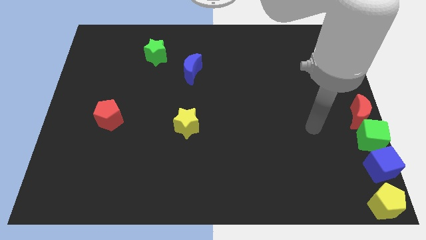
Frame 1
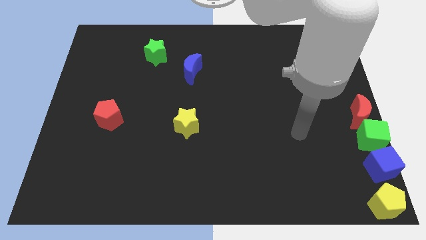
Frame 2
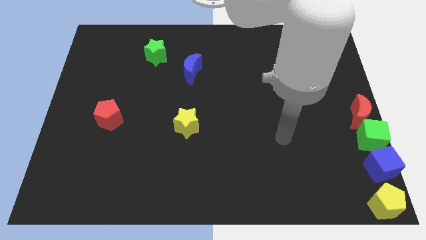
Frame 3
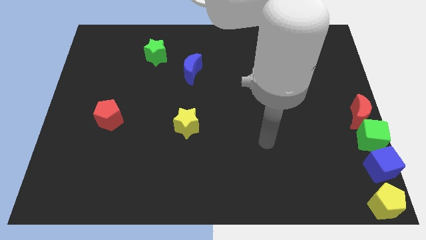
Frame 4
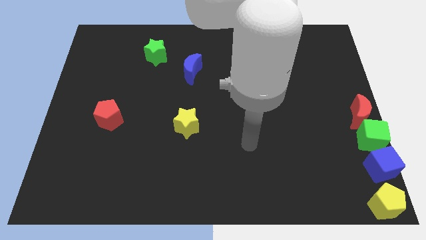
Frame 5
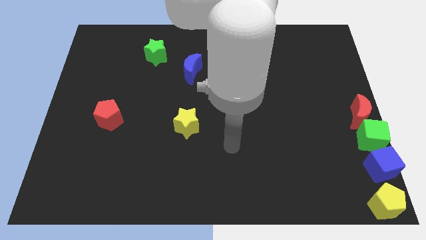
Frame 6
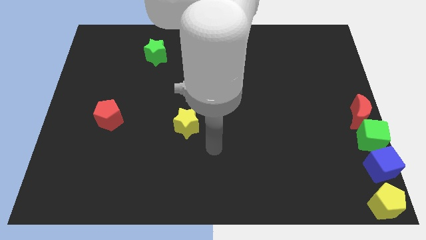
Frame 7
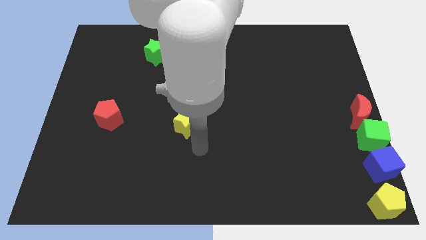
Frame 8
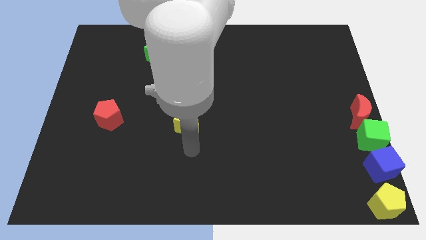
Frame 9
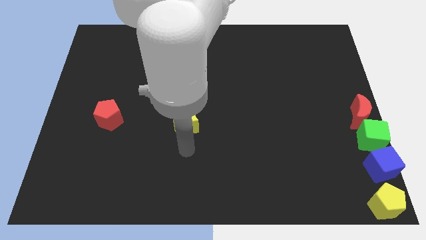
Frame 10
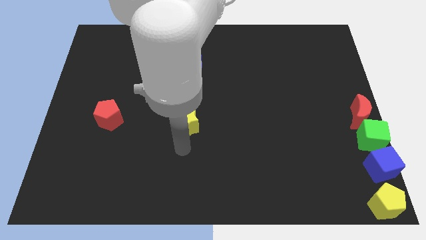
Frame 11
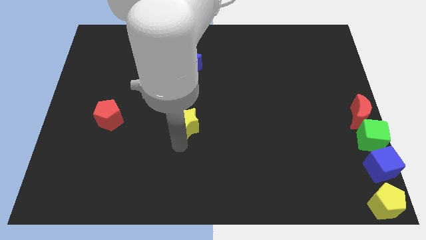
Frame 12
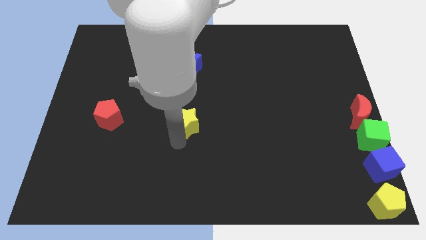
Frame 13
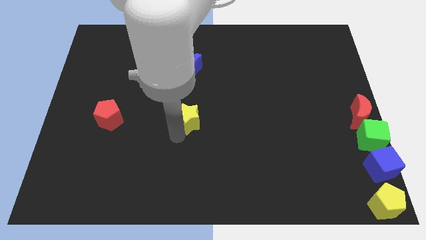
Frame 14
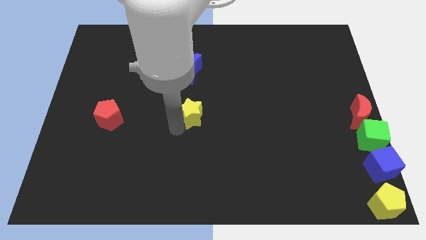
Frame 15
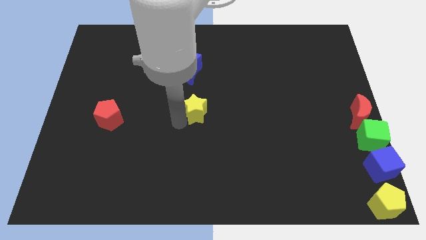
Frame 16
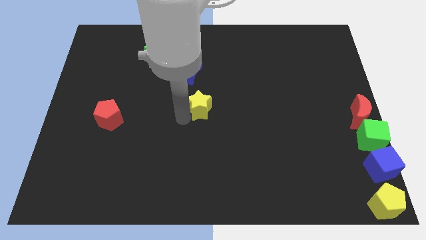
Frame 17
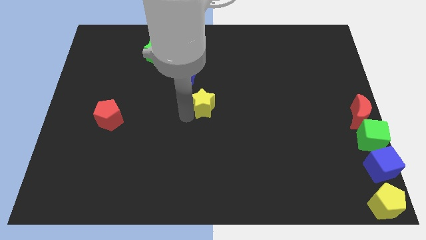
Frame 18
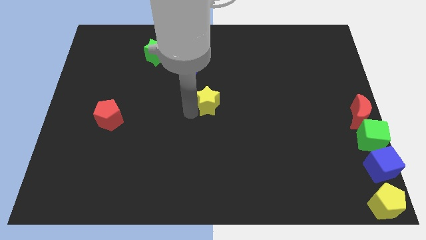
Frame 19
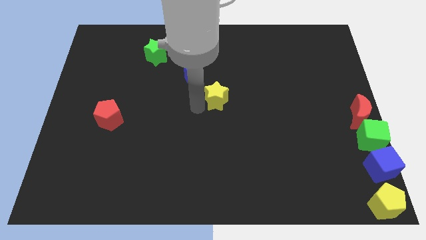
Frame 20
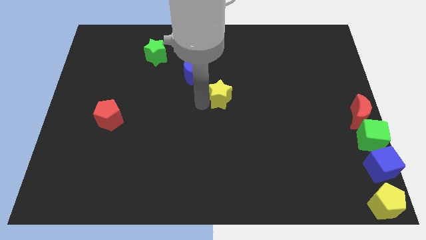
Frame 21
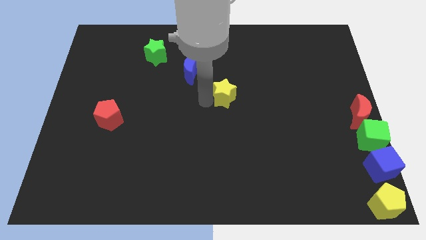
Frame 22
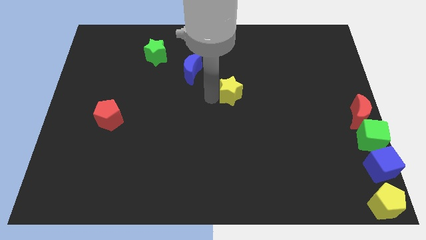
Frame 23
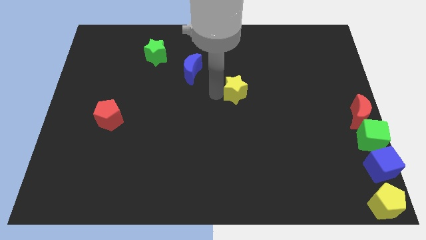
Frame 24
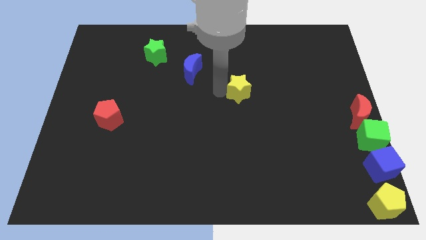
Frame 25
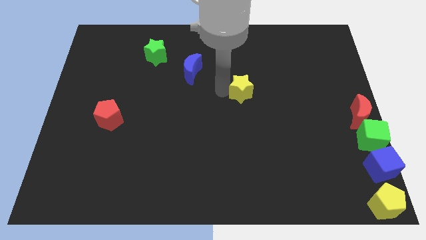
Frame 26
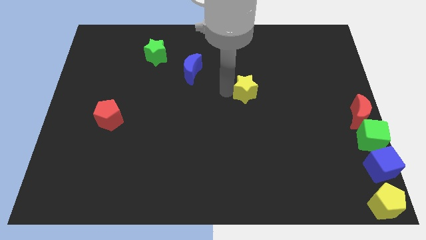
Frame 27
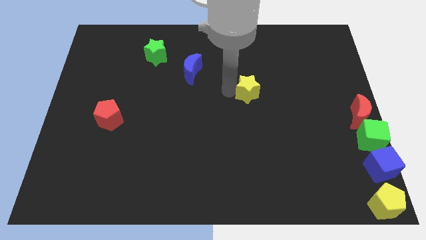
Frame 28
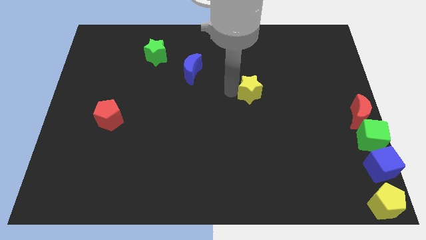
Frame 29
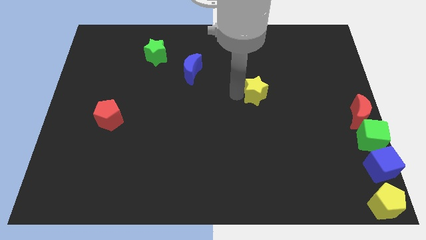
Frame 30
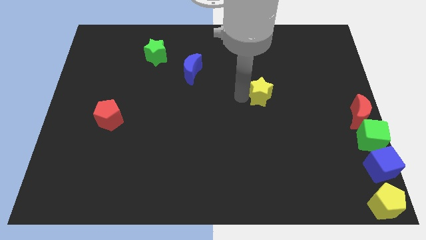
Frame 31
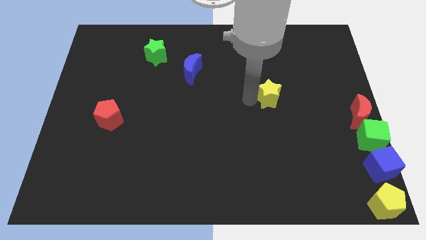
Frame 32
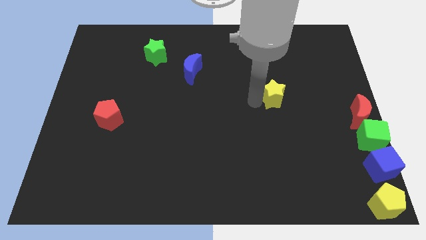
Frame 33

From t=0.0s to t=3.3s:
move the yellow star towards the red crescent

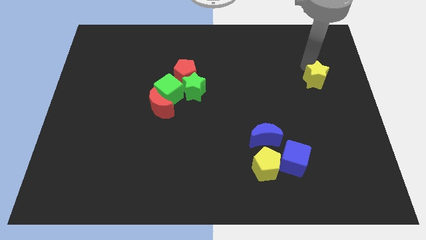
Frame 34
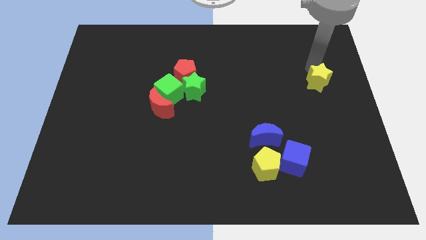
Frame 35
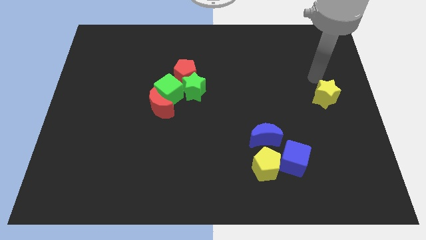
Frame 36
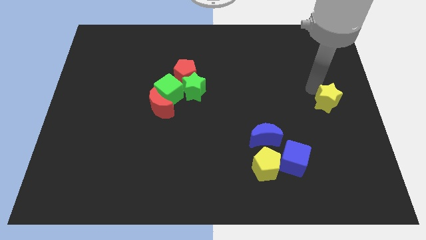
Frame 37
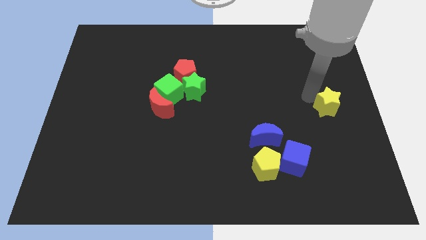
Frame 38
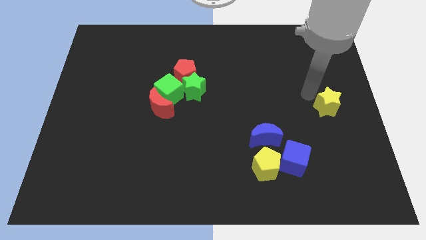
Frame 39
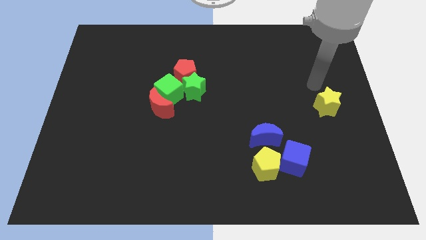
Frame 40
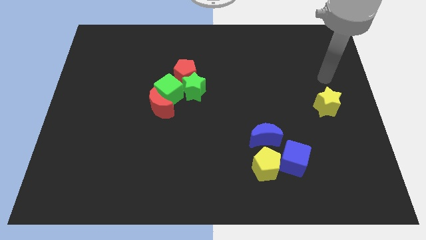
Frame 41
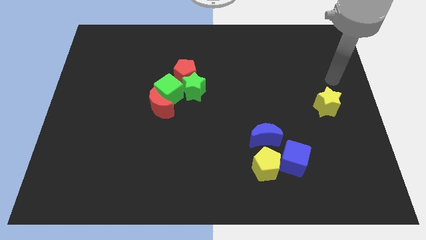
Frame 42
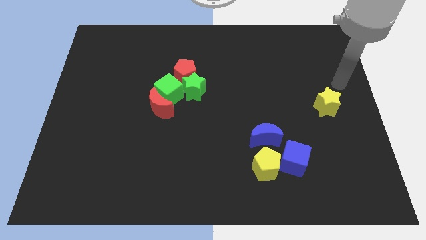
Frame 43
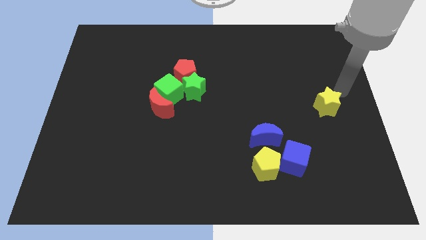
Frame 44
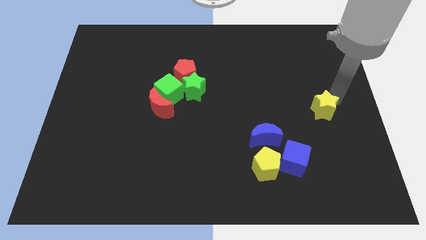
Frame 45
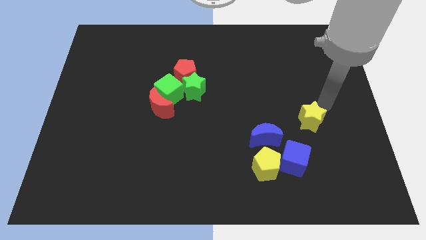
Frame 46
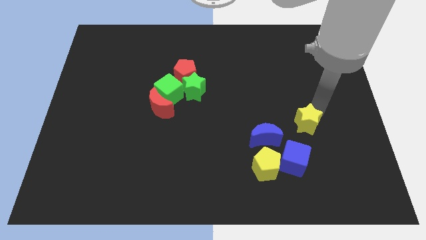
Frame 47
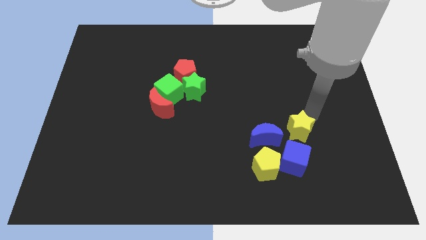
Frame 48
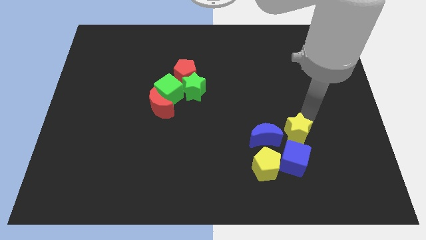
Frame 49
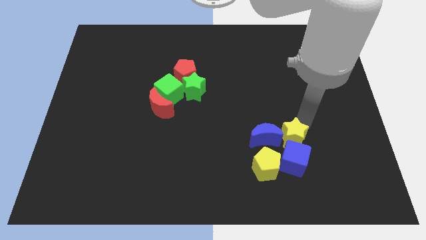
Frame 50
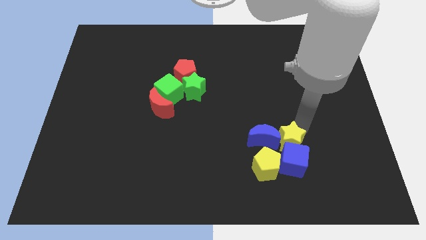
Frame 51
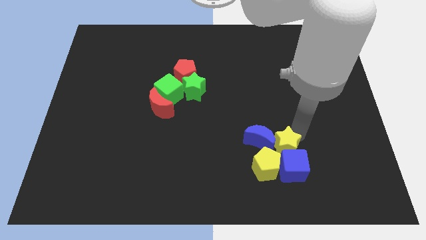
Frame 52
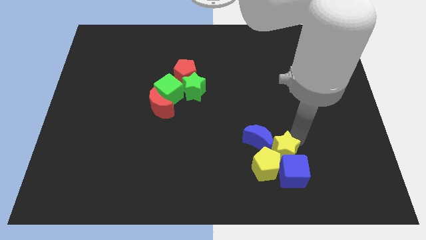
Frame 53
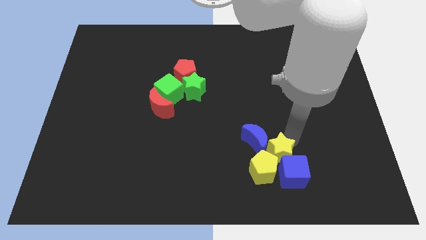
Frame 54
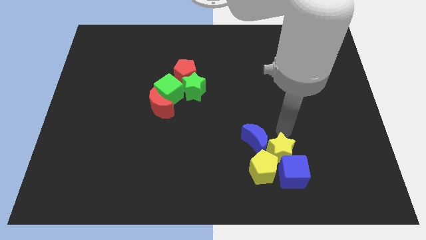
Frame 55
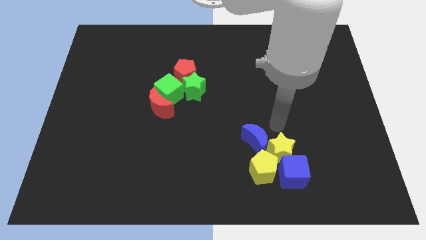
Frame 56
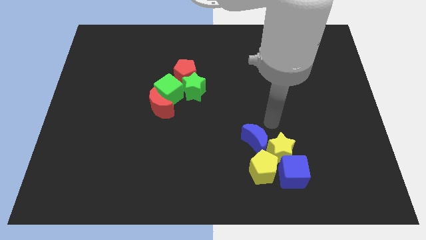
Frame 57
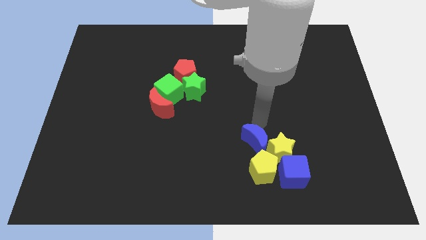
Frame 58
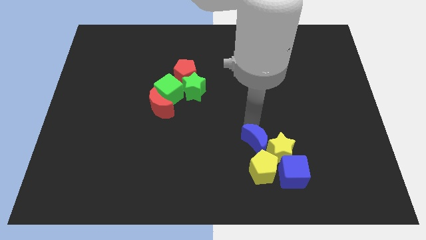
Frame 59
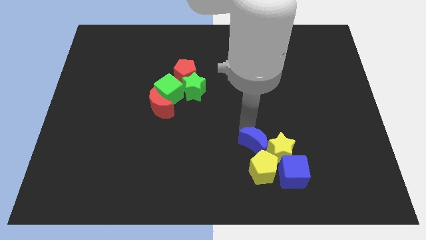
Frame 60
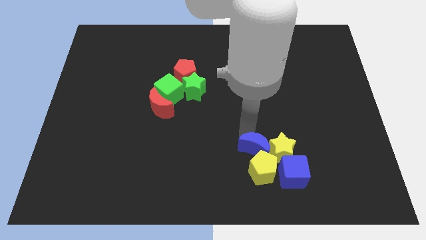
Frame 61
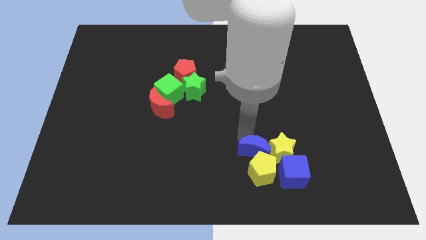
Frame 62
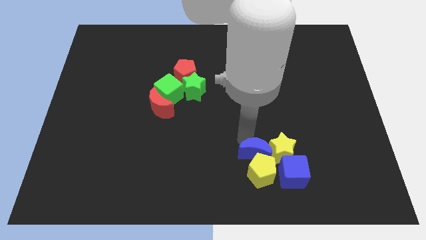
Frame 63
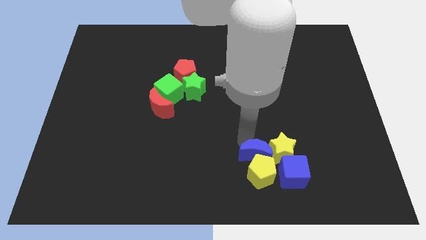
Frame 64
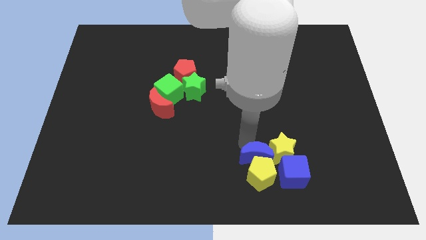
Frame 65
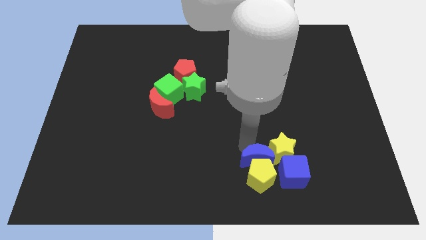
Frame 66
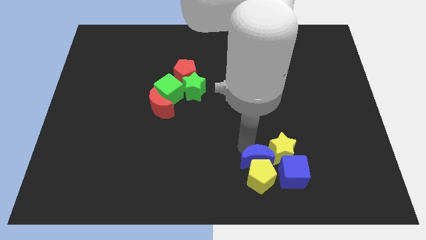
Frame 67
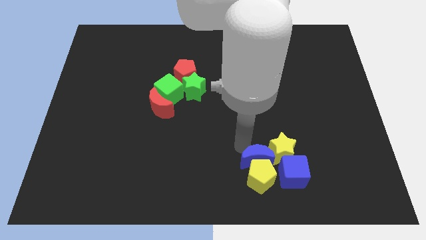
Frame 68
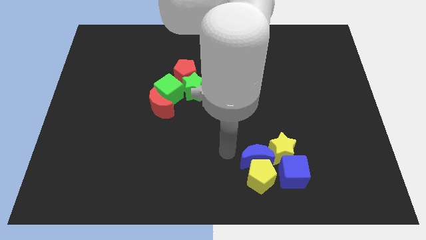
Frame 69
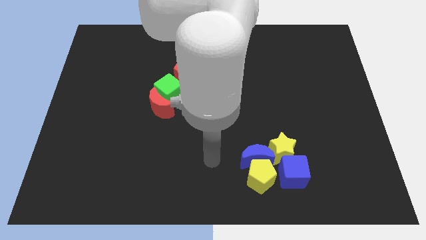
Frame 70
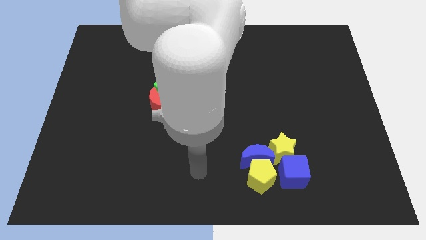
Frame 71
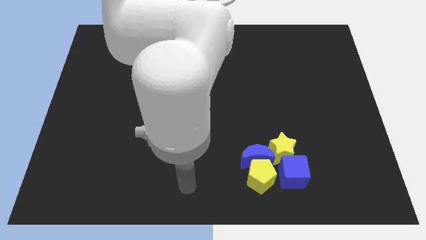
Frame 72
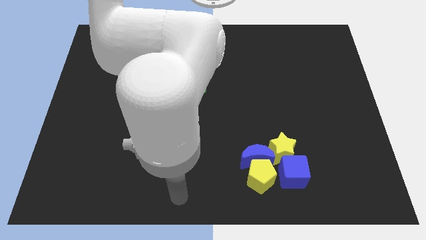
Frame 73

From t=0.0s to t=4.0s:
drag the yellow star close to the group of blocks

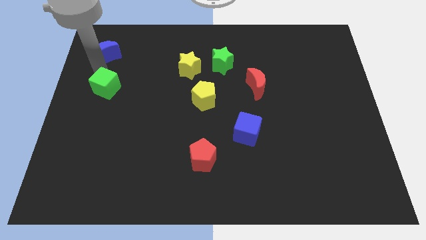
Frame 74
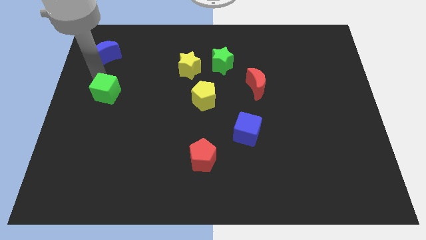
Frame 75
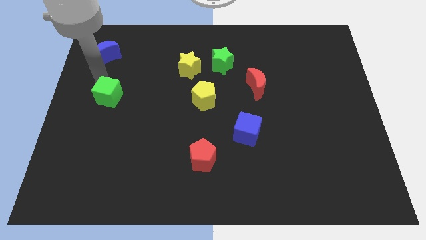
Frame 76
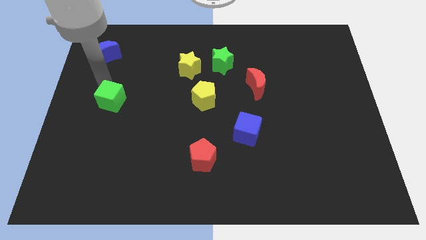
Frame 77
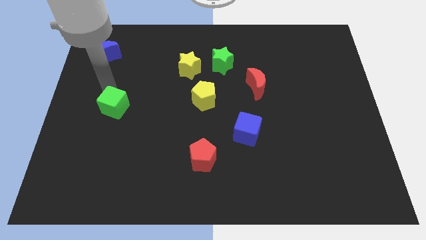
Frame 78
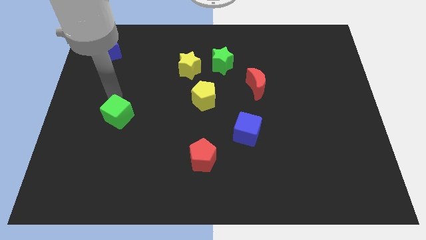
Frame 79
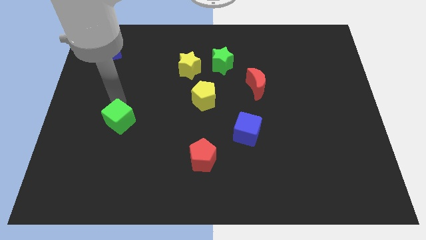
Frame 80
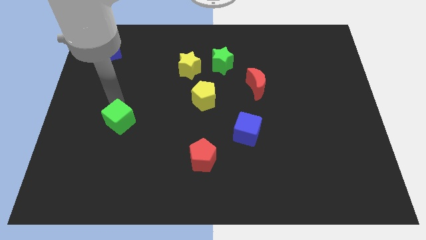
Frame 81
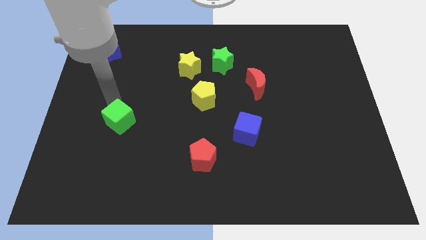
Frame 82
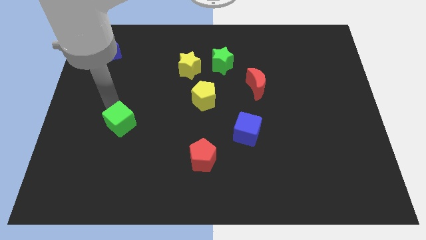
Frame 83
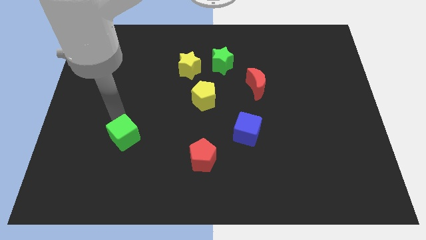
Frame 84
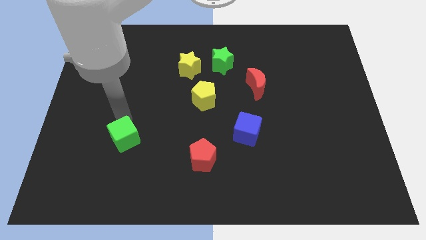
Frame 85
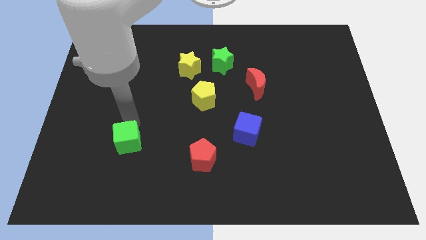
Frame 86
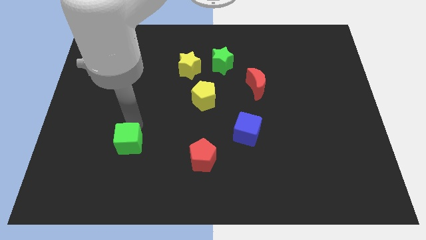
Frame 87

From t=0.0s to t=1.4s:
move the green cube down slightly

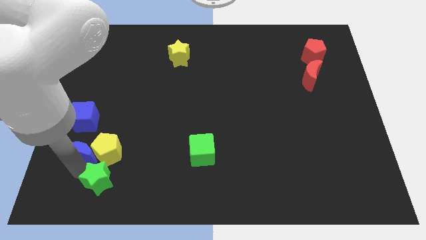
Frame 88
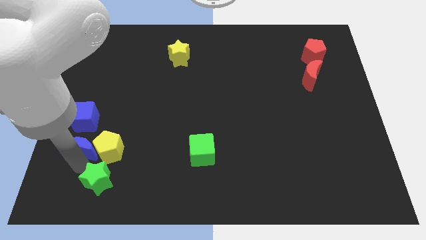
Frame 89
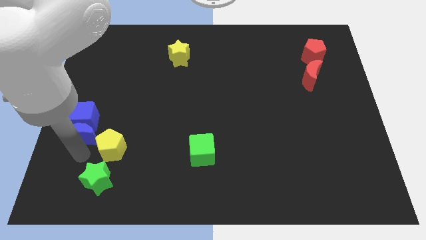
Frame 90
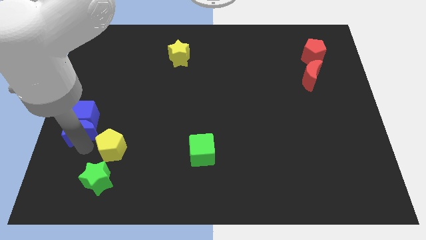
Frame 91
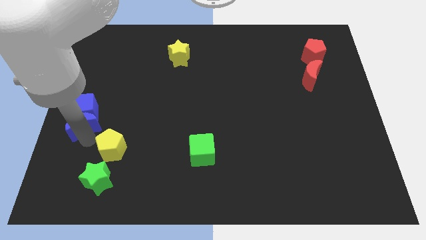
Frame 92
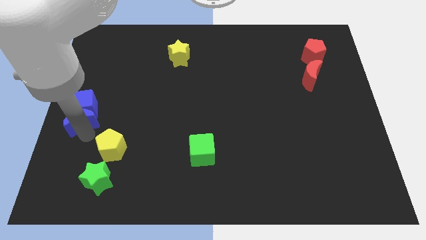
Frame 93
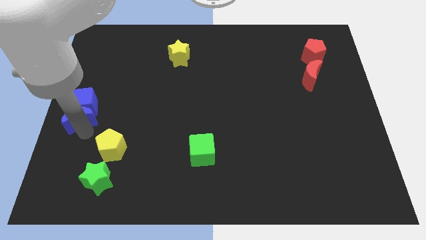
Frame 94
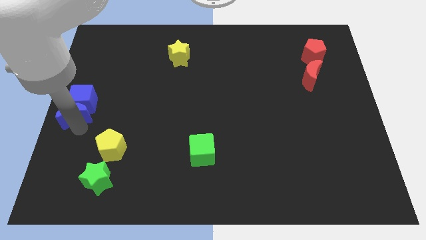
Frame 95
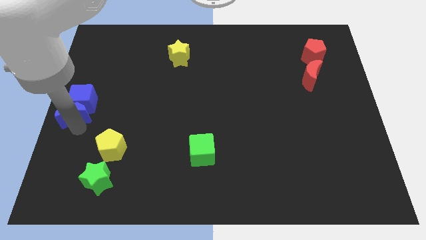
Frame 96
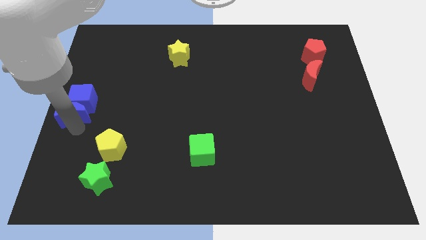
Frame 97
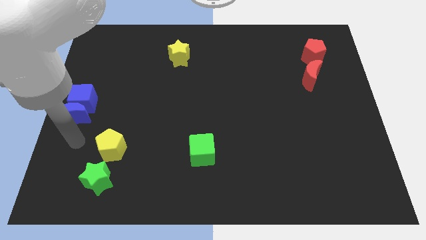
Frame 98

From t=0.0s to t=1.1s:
move blue blocks to center left
